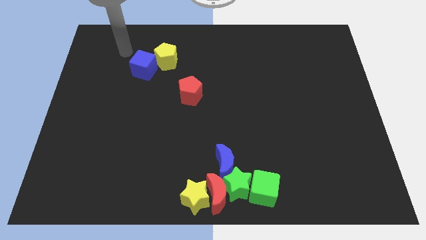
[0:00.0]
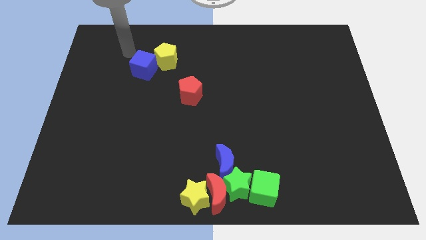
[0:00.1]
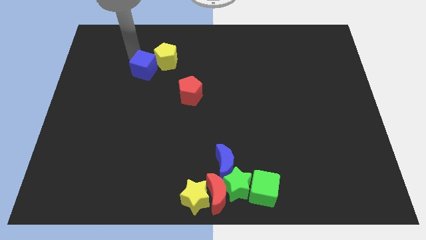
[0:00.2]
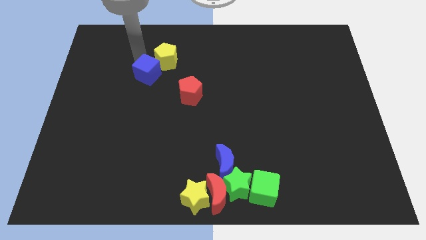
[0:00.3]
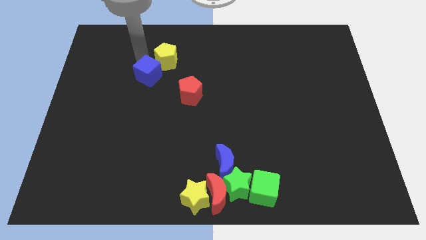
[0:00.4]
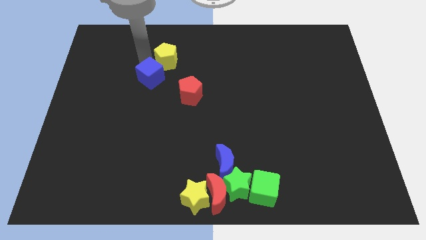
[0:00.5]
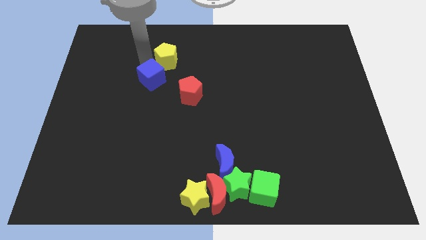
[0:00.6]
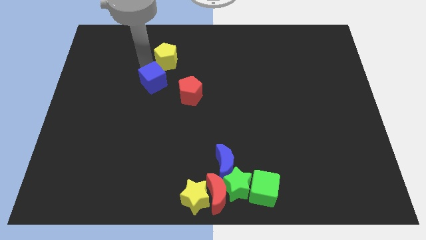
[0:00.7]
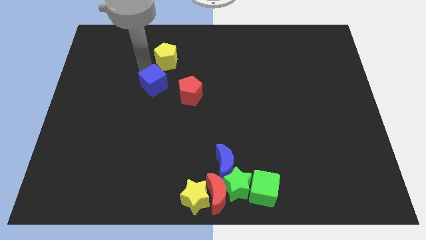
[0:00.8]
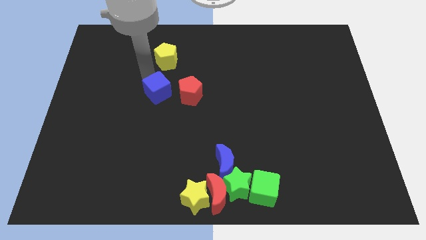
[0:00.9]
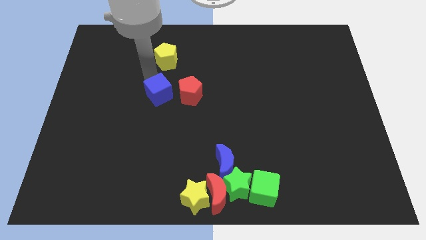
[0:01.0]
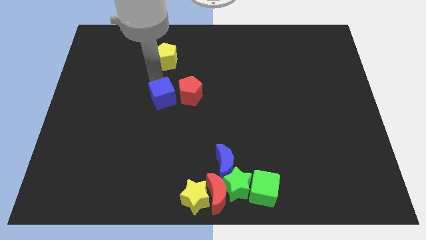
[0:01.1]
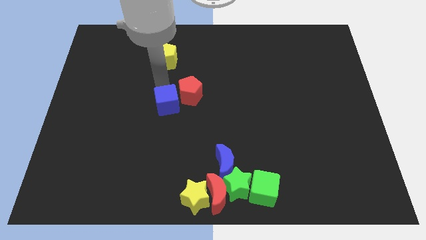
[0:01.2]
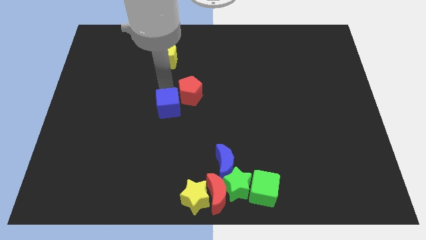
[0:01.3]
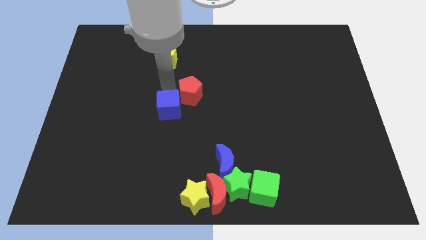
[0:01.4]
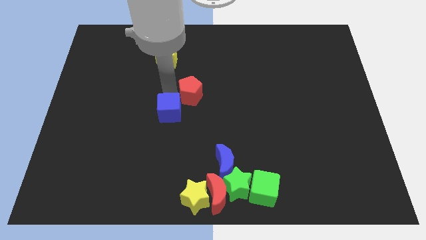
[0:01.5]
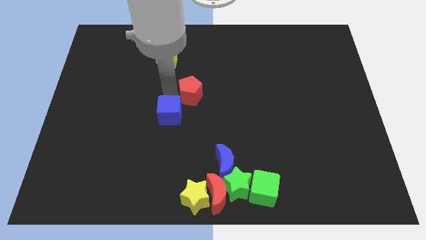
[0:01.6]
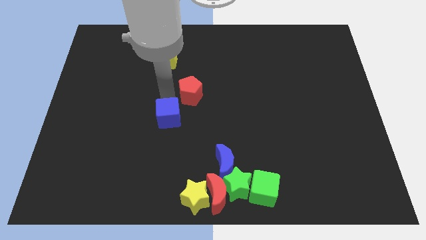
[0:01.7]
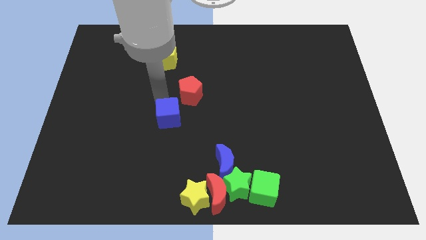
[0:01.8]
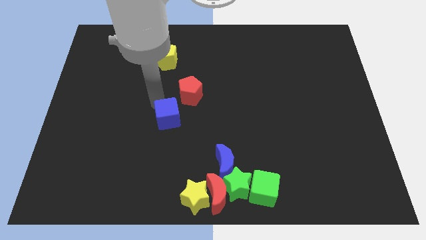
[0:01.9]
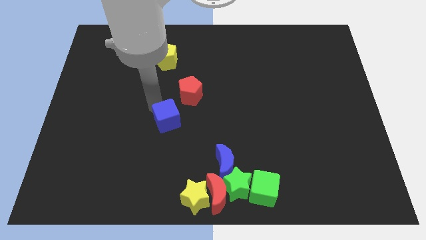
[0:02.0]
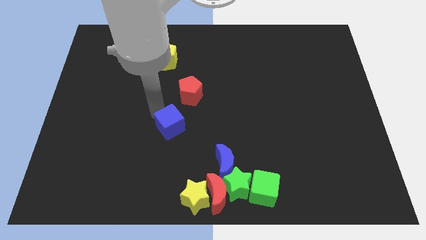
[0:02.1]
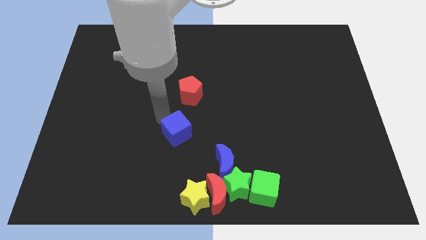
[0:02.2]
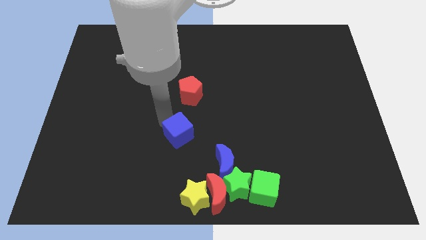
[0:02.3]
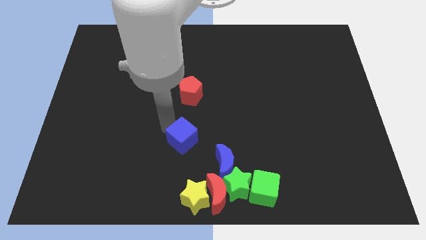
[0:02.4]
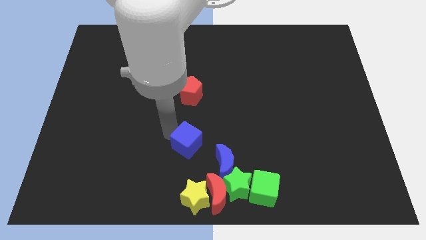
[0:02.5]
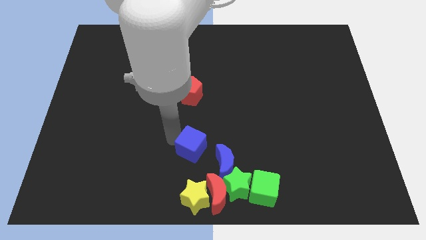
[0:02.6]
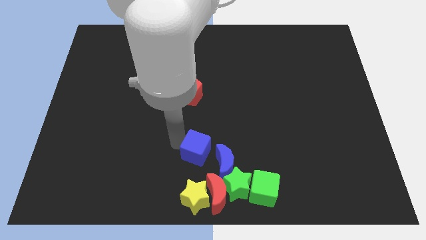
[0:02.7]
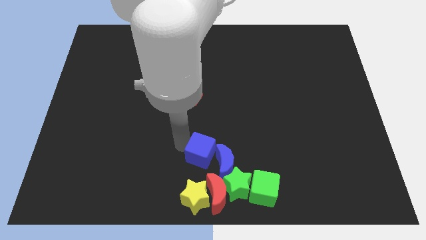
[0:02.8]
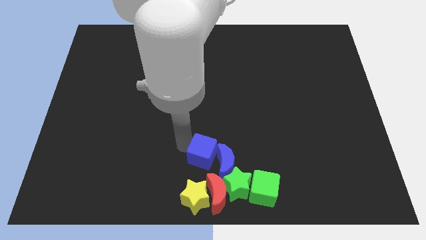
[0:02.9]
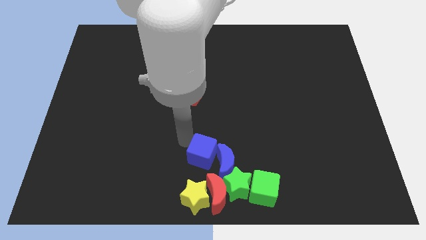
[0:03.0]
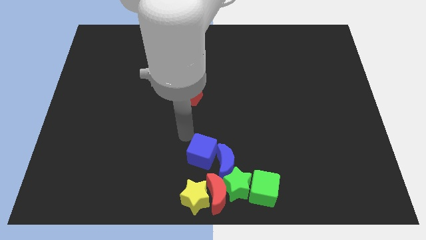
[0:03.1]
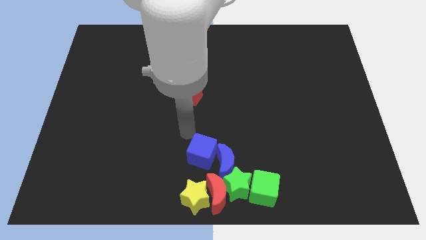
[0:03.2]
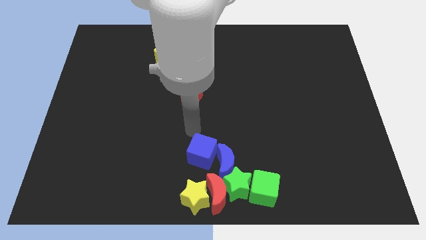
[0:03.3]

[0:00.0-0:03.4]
place the blue cube left to the blue moon

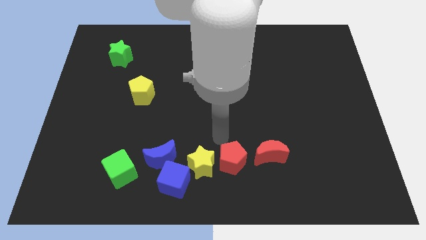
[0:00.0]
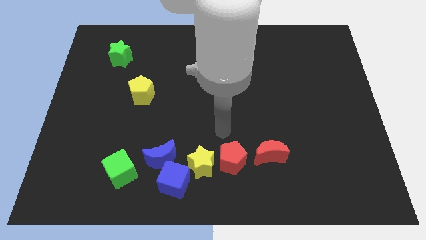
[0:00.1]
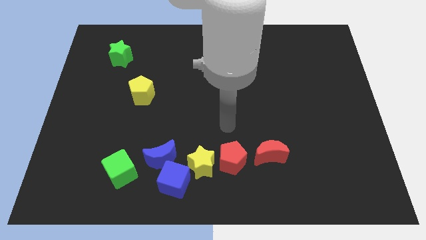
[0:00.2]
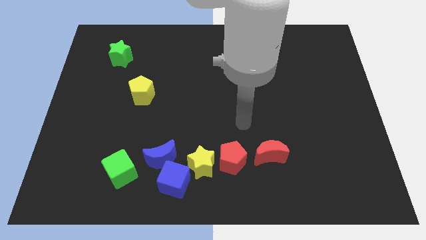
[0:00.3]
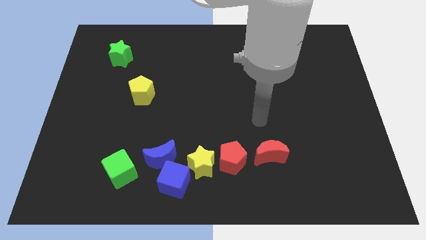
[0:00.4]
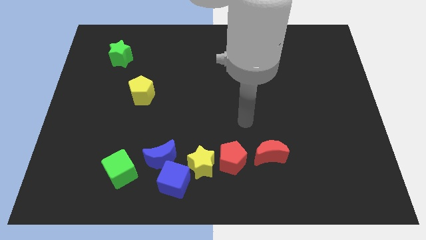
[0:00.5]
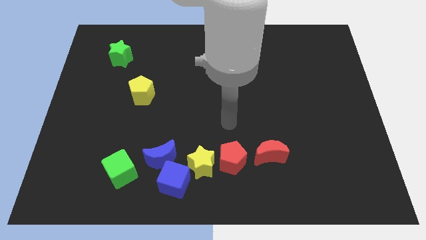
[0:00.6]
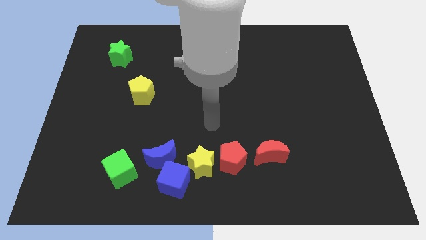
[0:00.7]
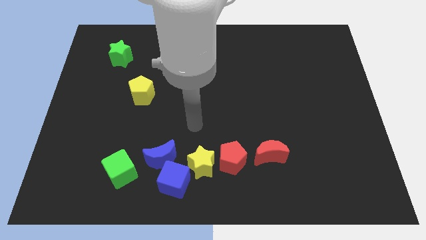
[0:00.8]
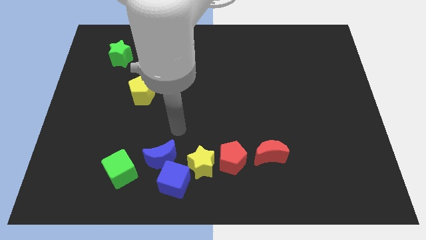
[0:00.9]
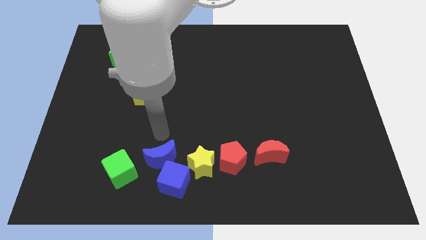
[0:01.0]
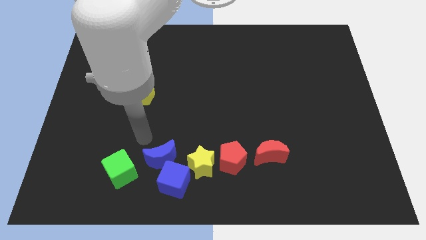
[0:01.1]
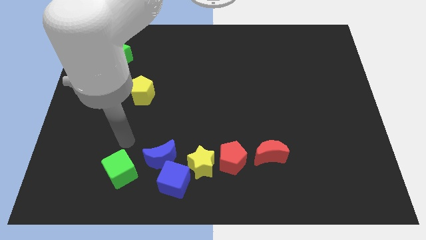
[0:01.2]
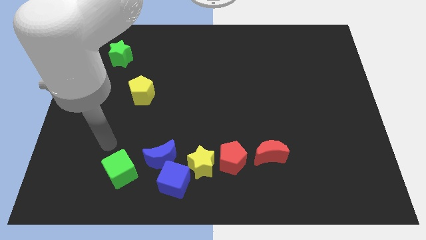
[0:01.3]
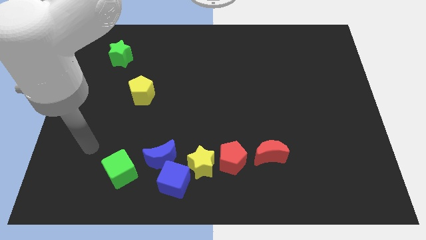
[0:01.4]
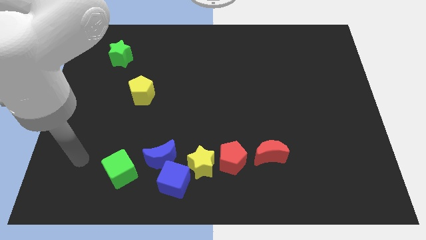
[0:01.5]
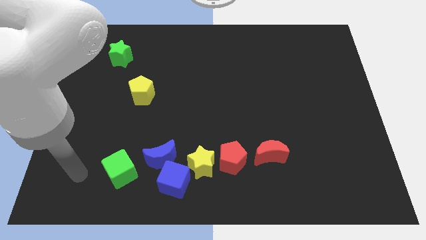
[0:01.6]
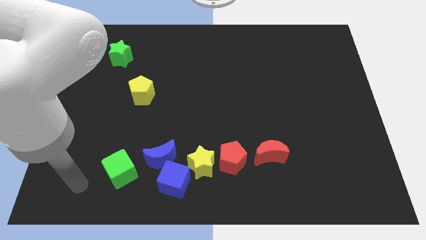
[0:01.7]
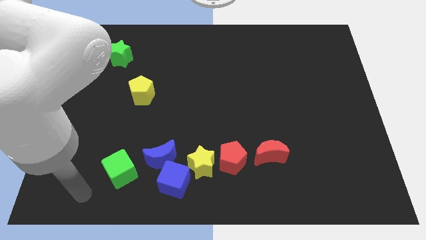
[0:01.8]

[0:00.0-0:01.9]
point your arm diagonal below the green cube

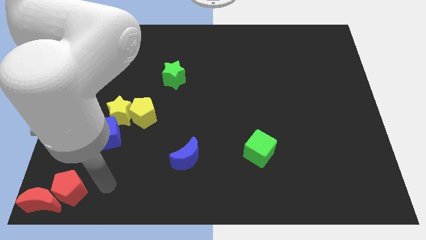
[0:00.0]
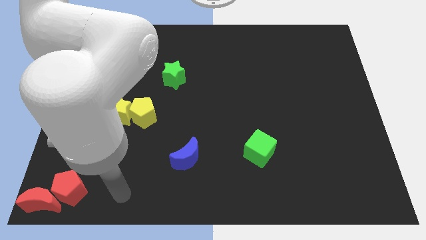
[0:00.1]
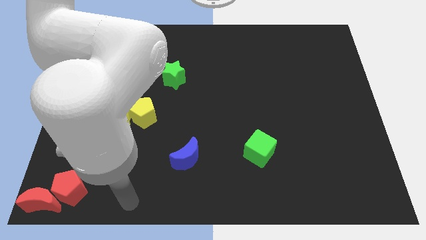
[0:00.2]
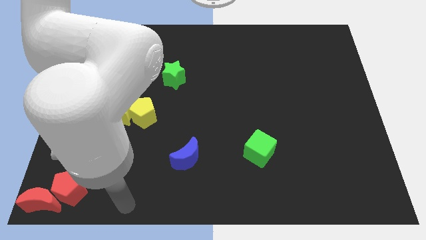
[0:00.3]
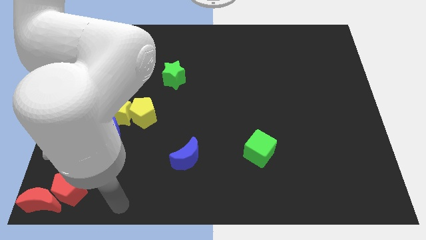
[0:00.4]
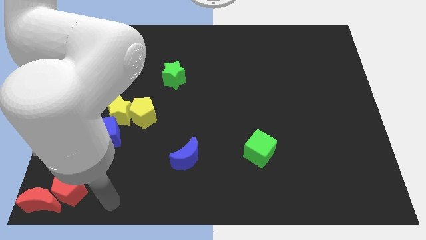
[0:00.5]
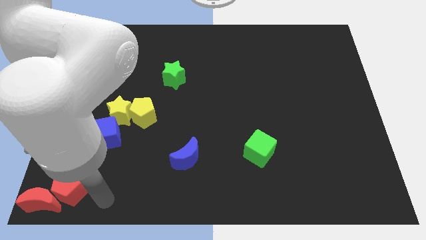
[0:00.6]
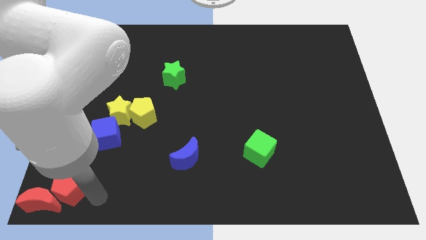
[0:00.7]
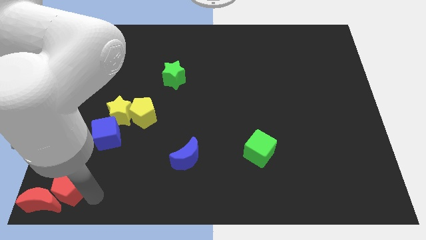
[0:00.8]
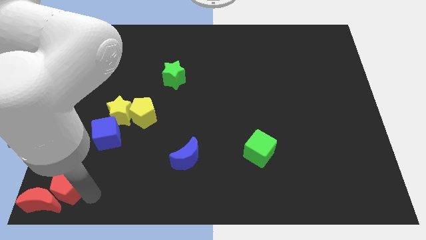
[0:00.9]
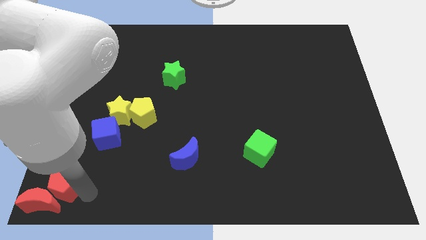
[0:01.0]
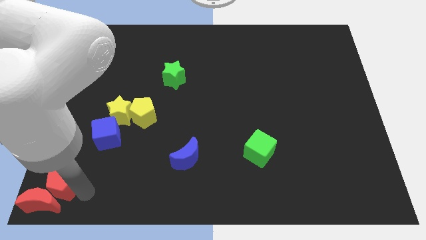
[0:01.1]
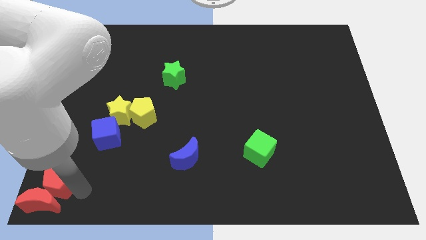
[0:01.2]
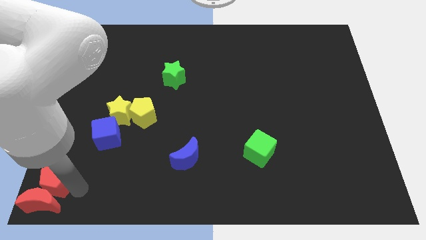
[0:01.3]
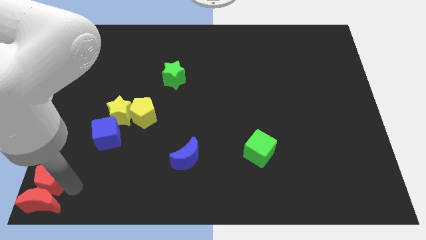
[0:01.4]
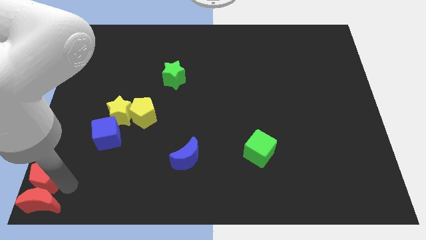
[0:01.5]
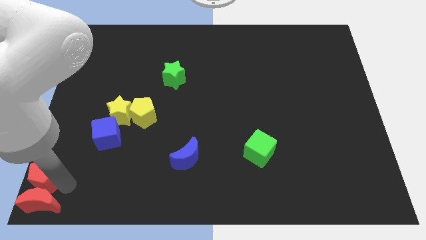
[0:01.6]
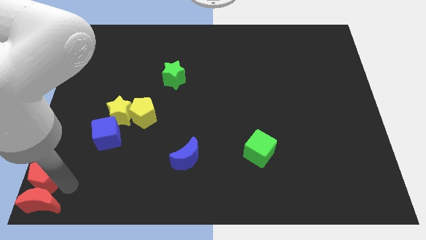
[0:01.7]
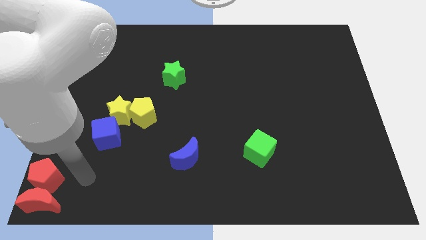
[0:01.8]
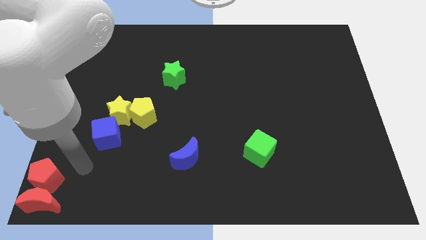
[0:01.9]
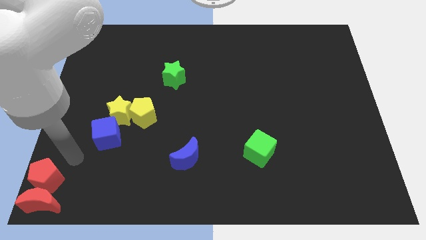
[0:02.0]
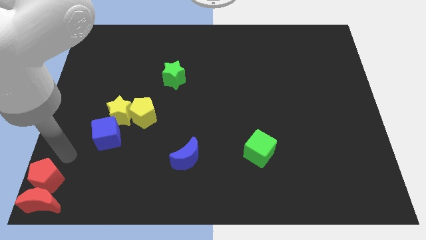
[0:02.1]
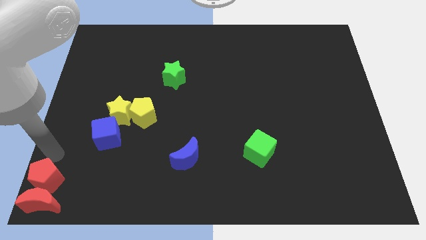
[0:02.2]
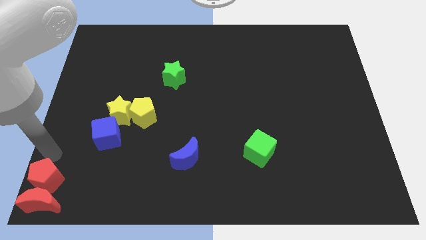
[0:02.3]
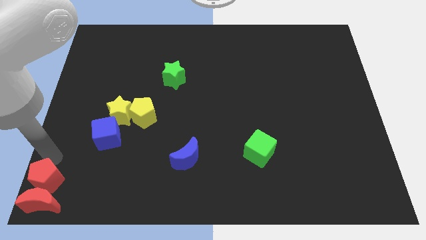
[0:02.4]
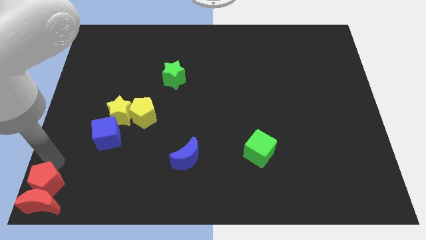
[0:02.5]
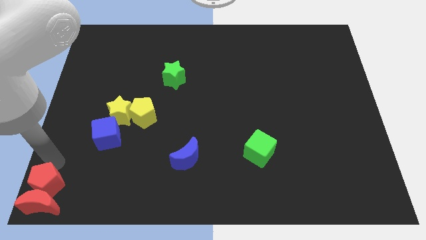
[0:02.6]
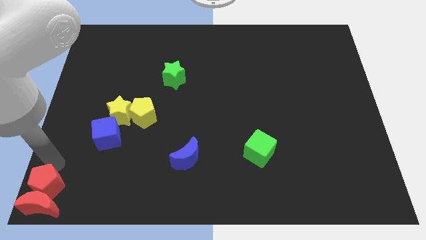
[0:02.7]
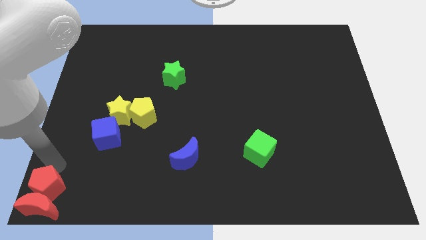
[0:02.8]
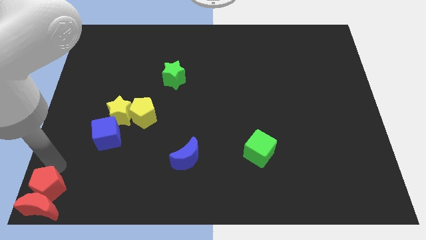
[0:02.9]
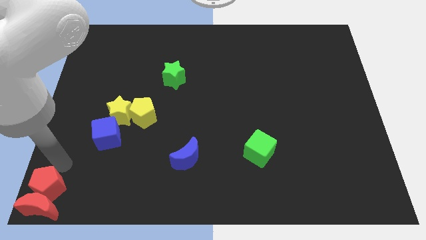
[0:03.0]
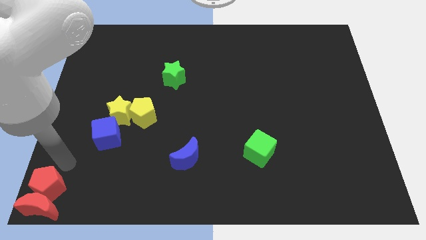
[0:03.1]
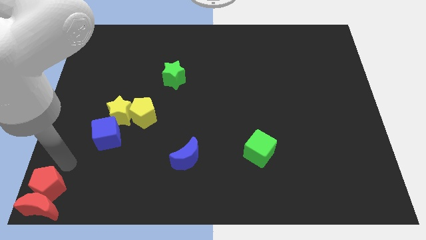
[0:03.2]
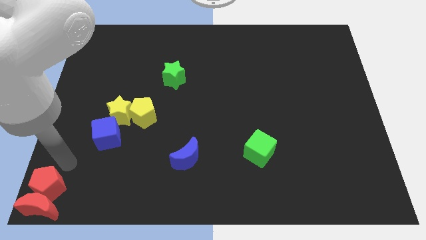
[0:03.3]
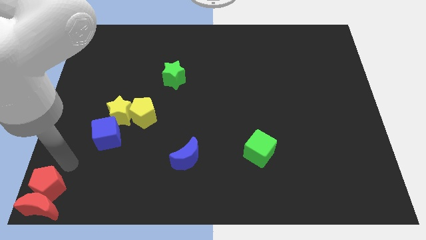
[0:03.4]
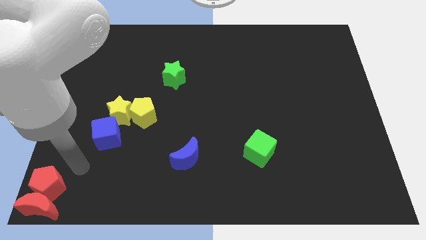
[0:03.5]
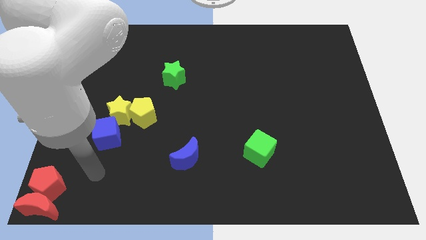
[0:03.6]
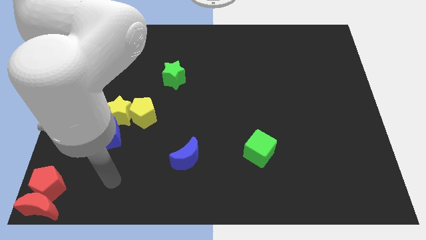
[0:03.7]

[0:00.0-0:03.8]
move the red pentagon above the red moon
